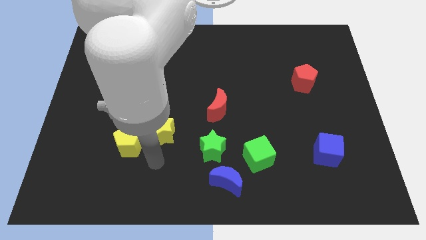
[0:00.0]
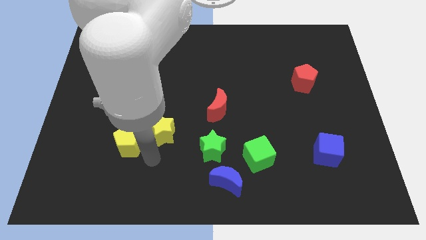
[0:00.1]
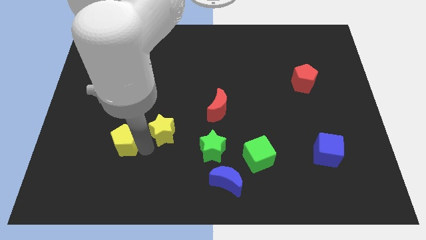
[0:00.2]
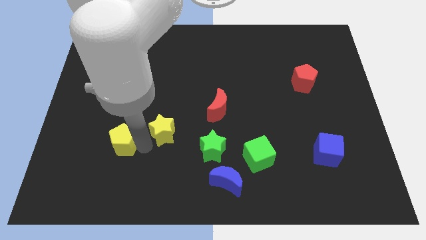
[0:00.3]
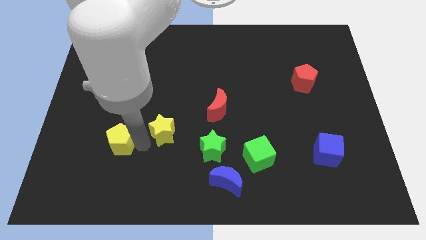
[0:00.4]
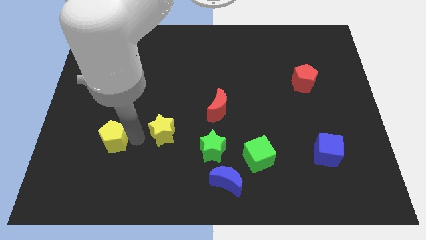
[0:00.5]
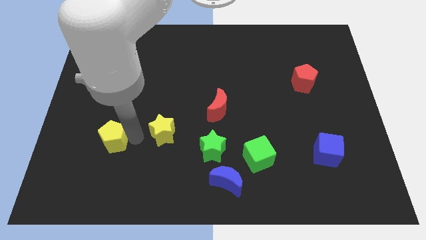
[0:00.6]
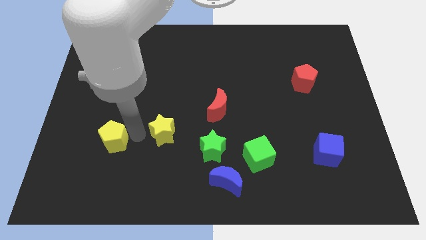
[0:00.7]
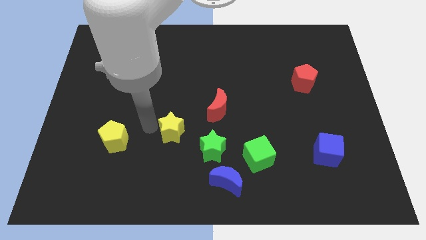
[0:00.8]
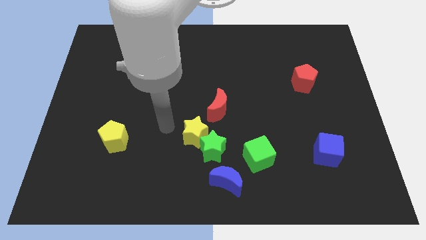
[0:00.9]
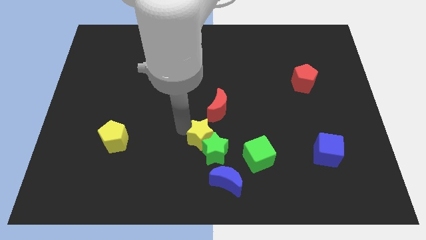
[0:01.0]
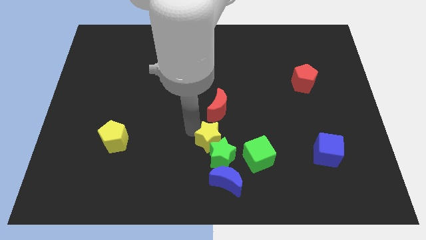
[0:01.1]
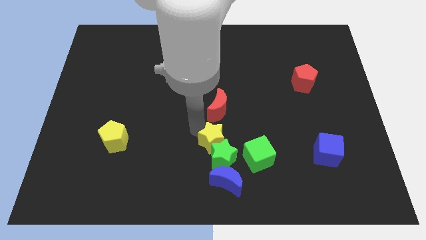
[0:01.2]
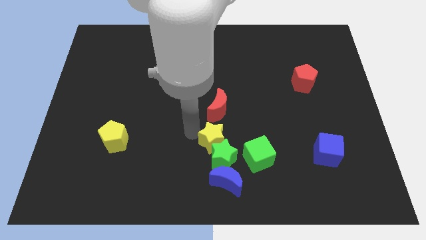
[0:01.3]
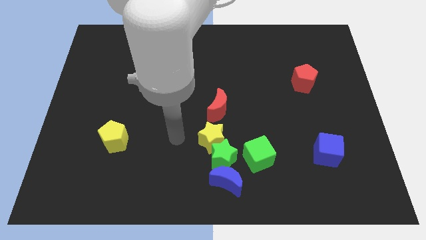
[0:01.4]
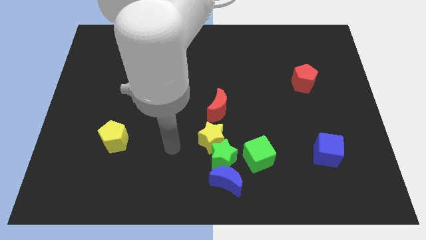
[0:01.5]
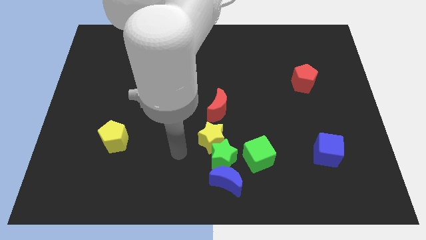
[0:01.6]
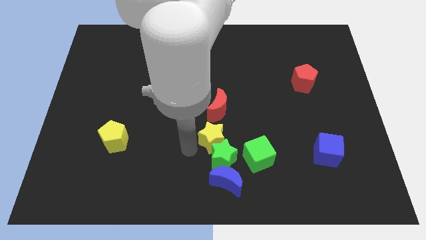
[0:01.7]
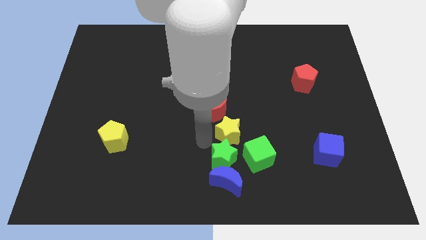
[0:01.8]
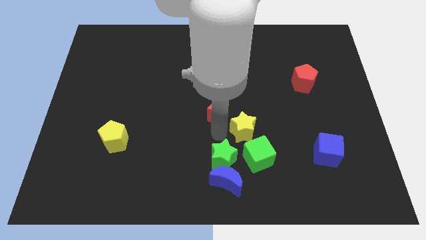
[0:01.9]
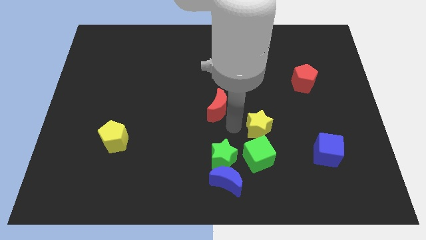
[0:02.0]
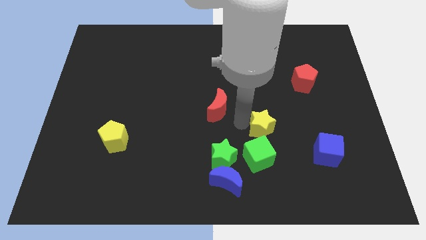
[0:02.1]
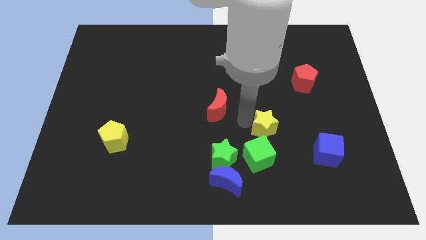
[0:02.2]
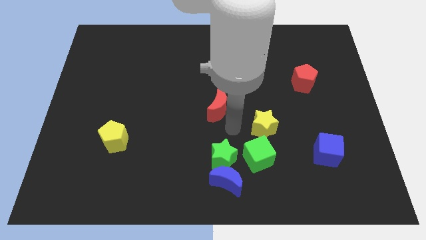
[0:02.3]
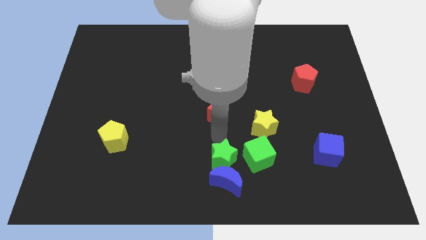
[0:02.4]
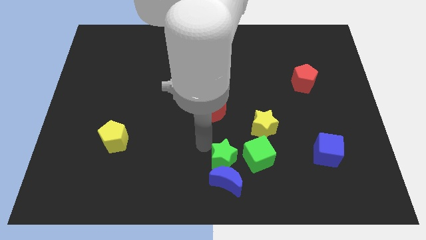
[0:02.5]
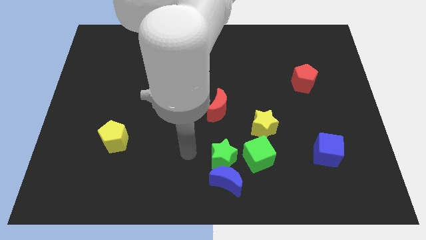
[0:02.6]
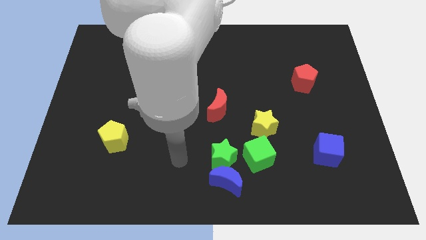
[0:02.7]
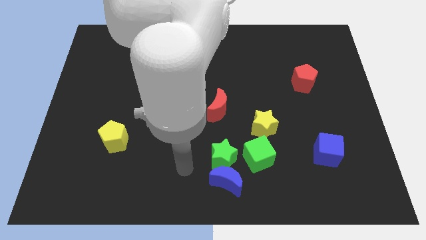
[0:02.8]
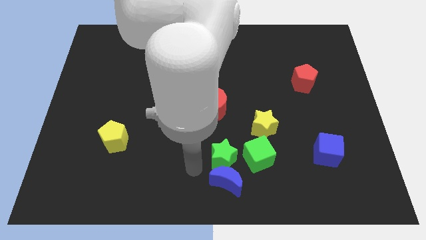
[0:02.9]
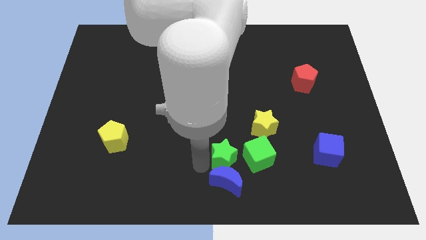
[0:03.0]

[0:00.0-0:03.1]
place yellow star above green cube

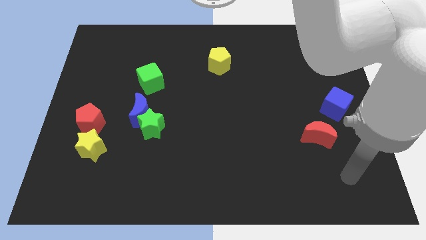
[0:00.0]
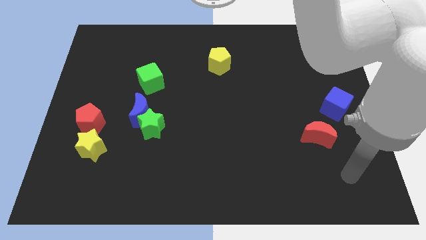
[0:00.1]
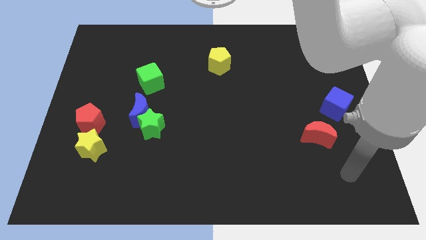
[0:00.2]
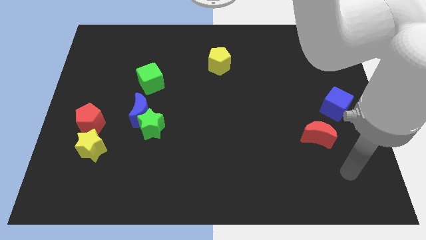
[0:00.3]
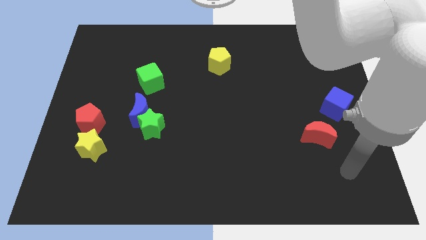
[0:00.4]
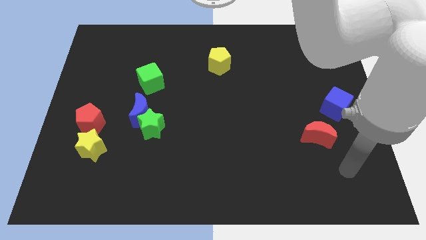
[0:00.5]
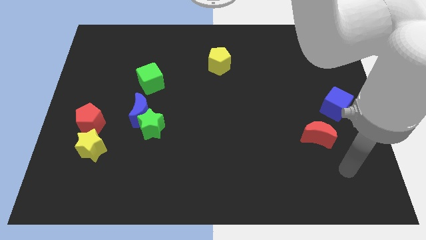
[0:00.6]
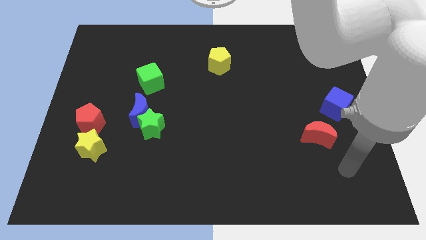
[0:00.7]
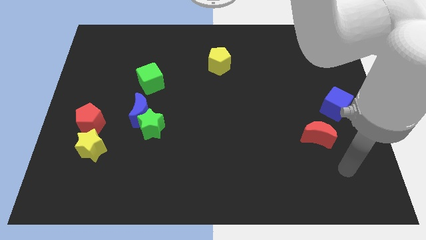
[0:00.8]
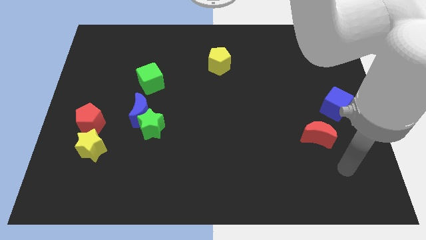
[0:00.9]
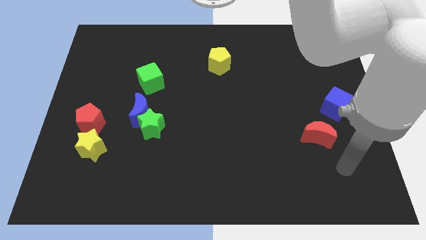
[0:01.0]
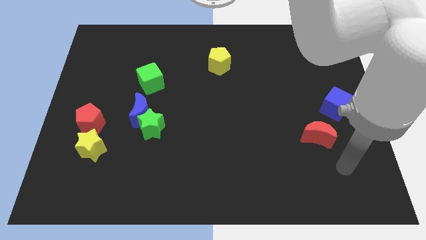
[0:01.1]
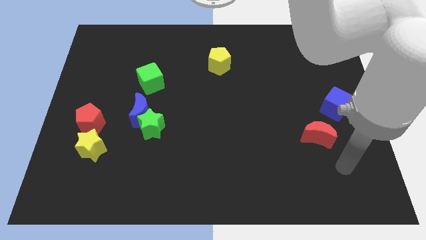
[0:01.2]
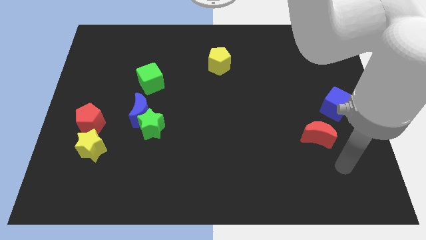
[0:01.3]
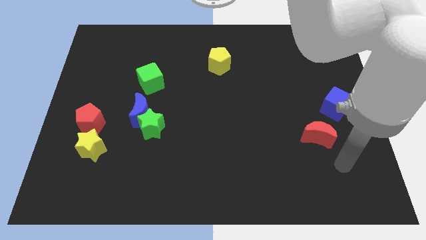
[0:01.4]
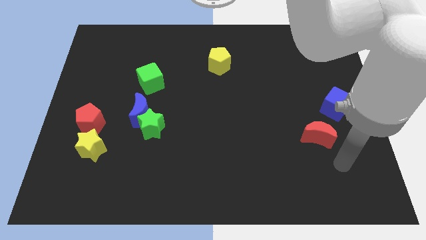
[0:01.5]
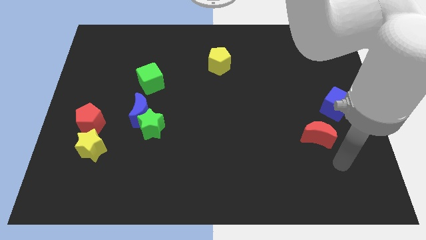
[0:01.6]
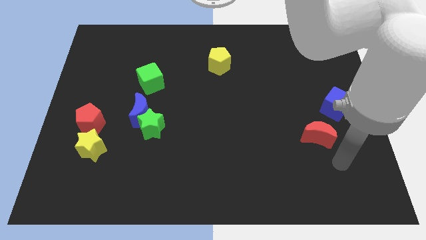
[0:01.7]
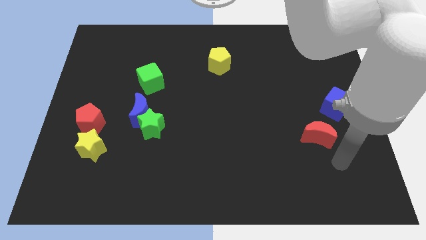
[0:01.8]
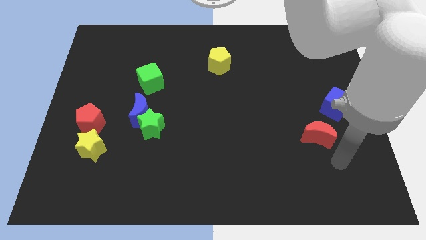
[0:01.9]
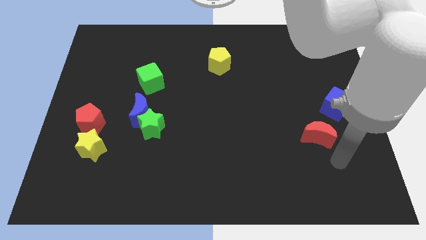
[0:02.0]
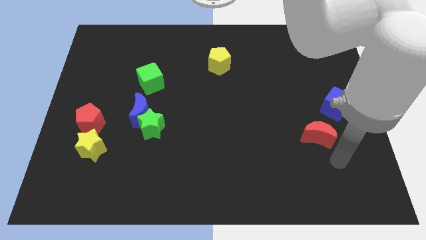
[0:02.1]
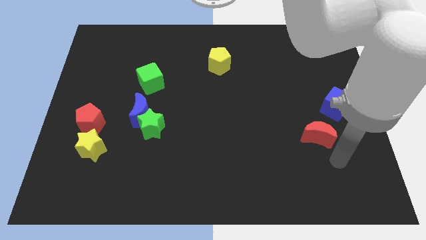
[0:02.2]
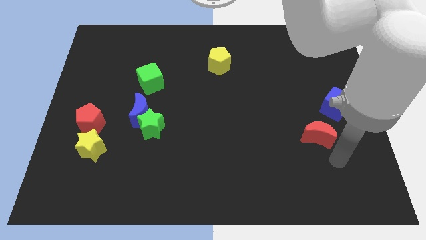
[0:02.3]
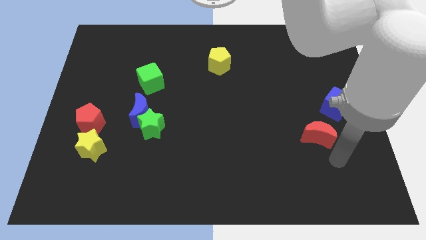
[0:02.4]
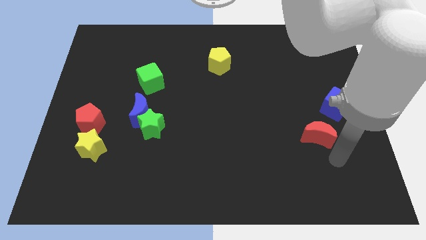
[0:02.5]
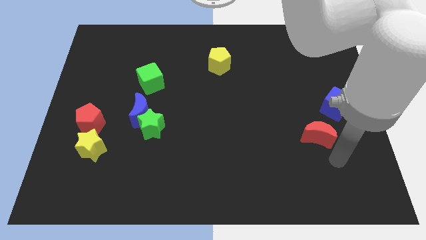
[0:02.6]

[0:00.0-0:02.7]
move your arm towards the red moon

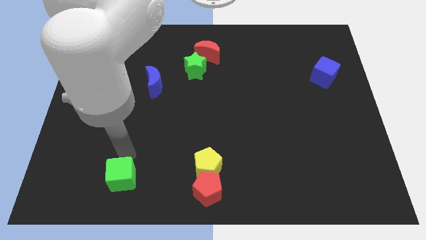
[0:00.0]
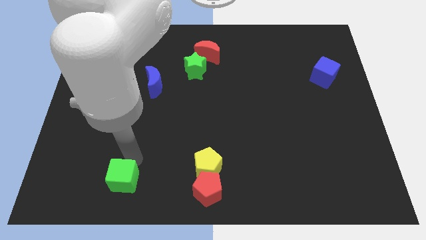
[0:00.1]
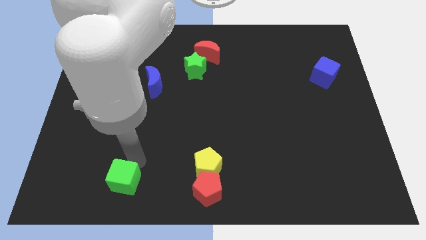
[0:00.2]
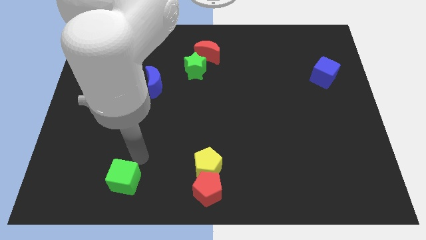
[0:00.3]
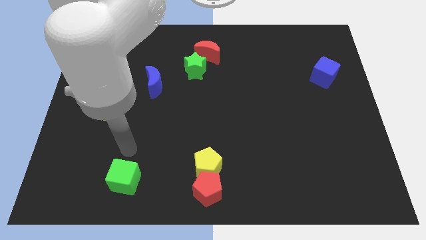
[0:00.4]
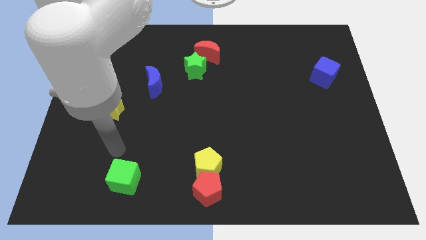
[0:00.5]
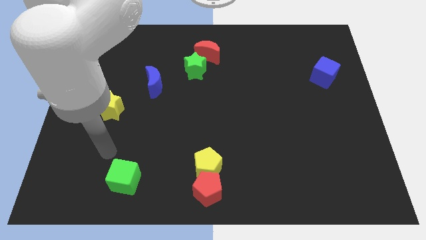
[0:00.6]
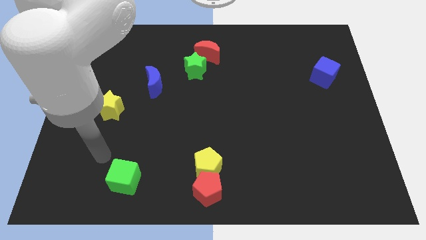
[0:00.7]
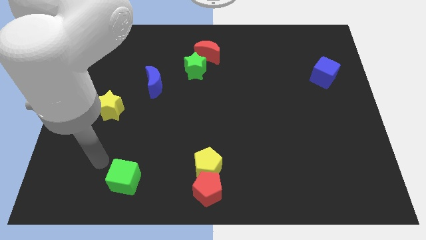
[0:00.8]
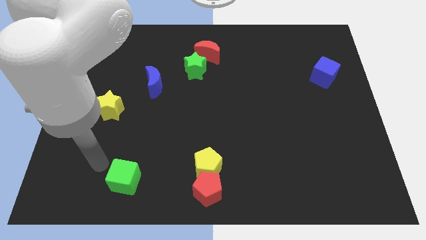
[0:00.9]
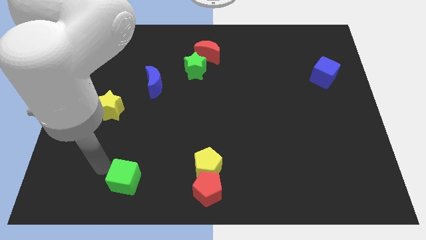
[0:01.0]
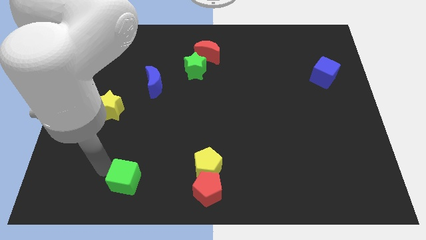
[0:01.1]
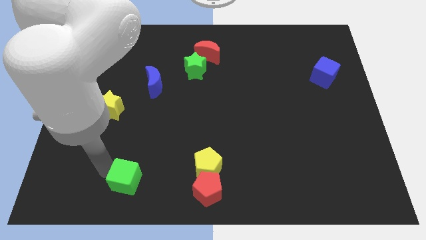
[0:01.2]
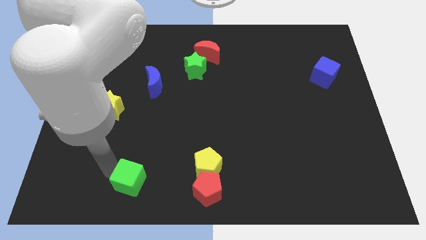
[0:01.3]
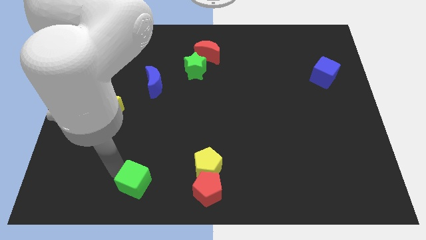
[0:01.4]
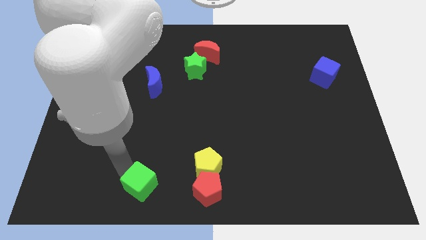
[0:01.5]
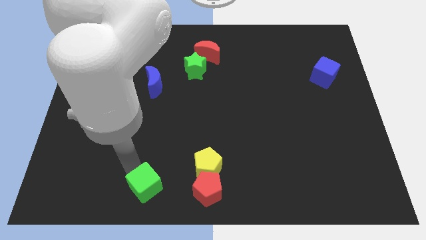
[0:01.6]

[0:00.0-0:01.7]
slide the green cube vertically at the bottom of the blue moon

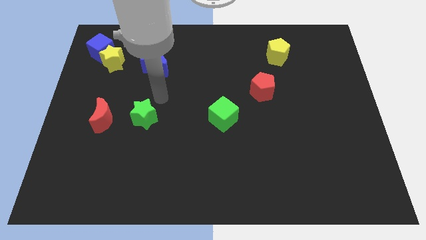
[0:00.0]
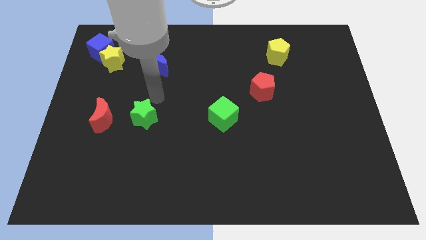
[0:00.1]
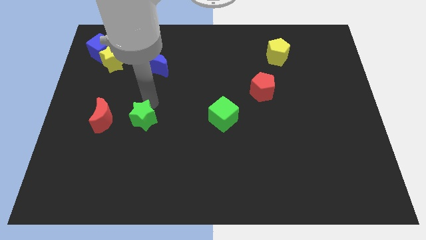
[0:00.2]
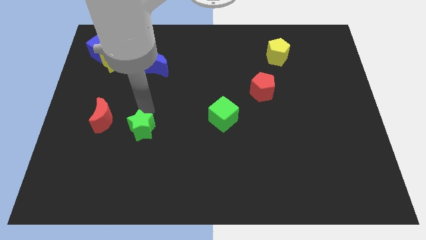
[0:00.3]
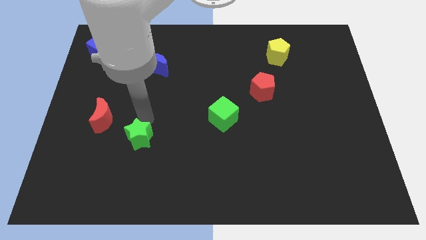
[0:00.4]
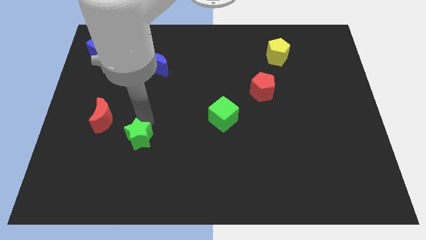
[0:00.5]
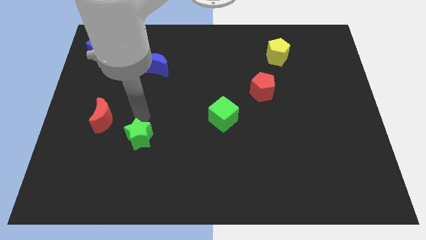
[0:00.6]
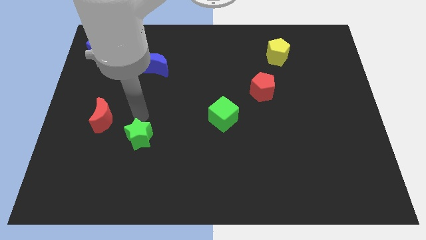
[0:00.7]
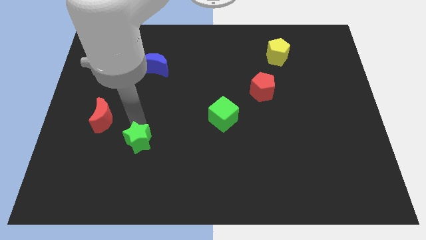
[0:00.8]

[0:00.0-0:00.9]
push green star towards the bottom of the board

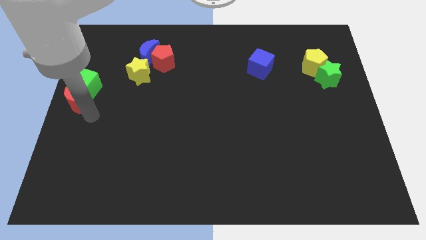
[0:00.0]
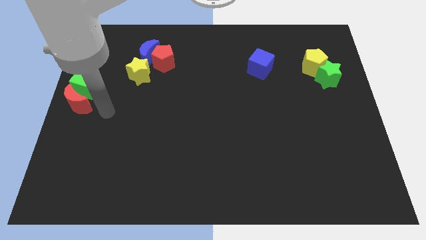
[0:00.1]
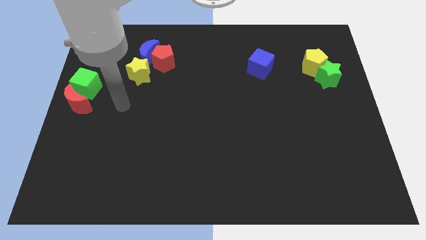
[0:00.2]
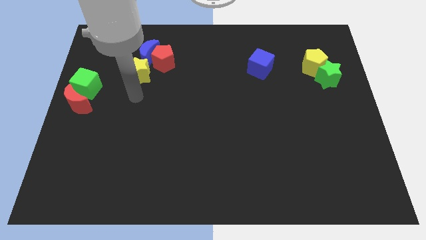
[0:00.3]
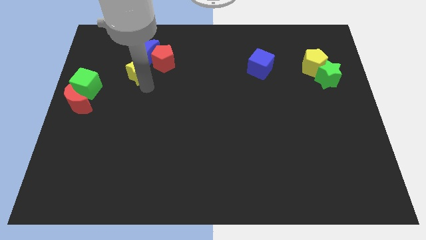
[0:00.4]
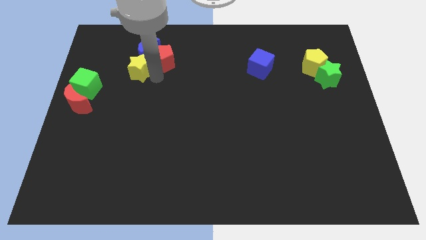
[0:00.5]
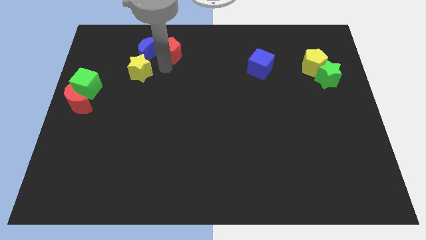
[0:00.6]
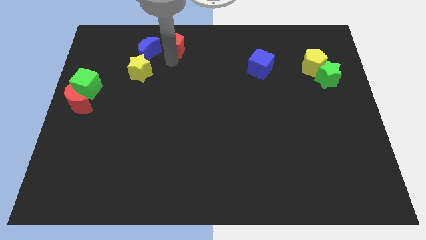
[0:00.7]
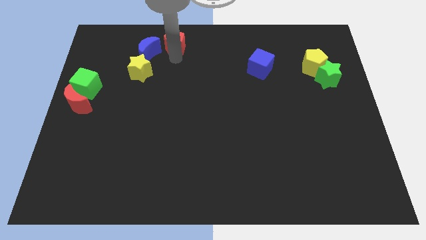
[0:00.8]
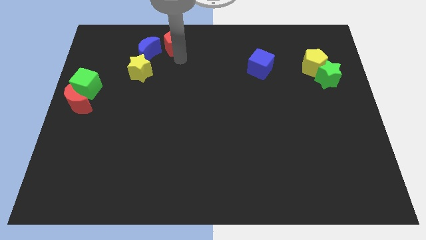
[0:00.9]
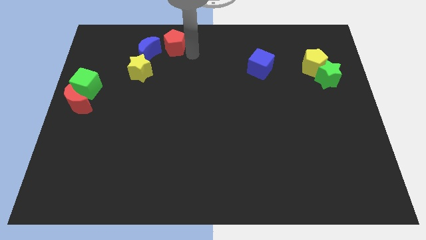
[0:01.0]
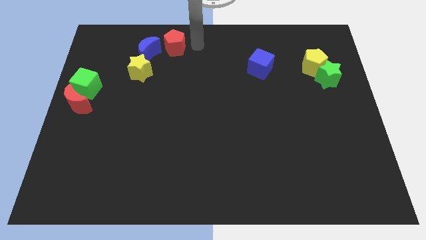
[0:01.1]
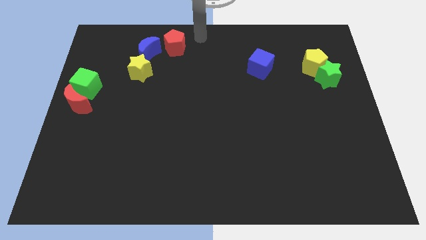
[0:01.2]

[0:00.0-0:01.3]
separate the red pentagon and the blue crescent
